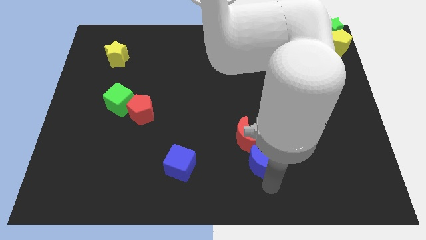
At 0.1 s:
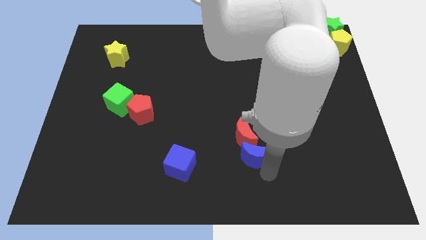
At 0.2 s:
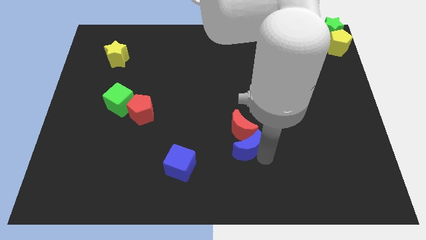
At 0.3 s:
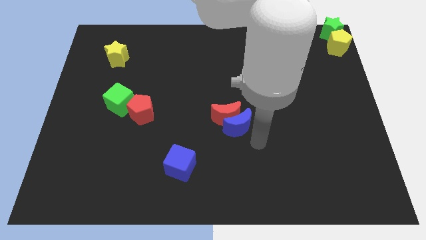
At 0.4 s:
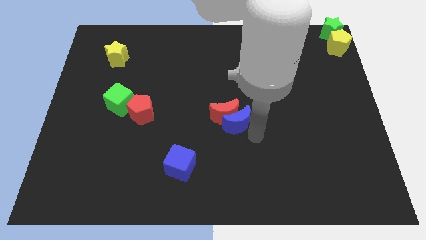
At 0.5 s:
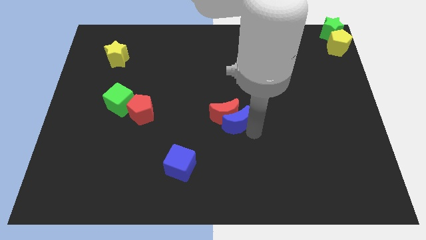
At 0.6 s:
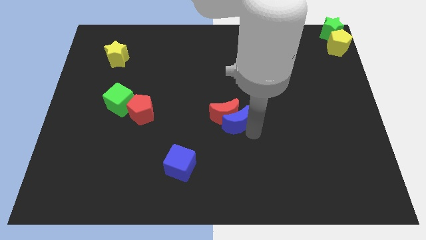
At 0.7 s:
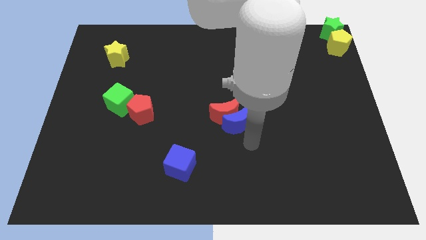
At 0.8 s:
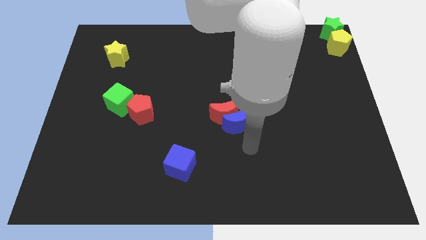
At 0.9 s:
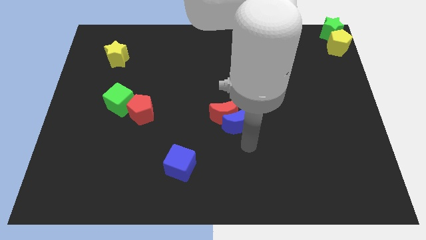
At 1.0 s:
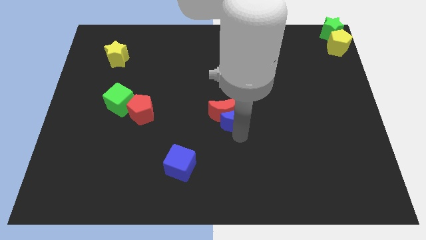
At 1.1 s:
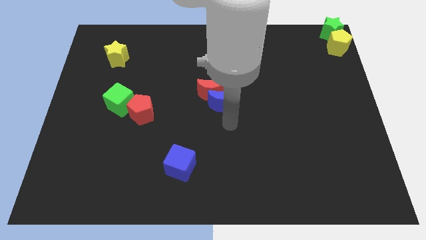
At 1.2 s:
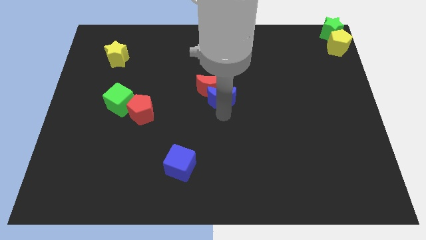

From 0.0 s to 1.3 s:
place the red and blue crescent at the center of the board

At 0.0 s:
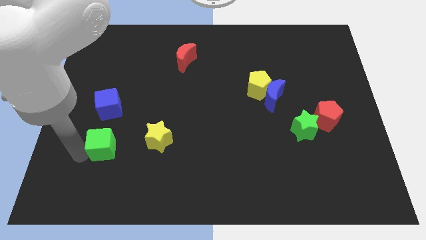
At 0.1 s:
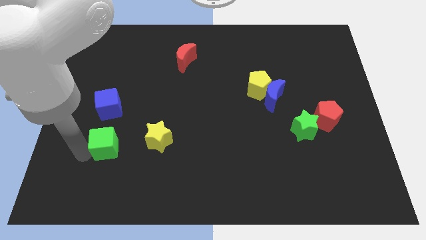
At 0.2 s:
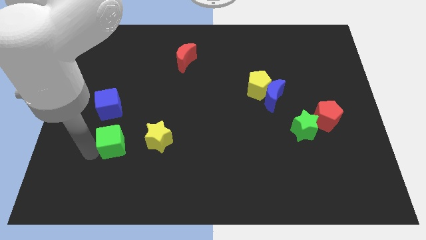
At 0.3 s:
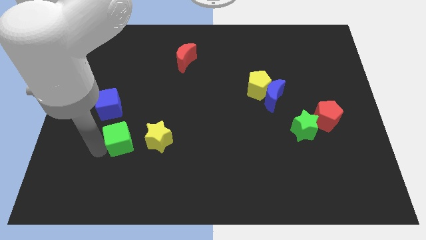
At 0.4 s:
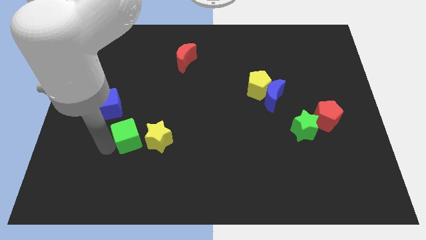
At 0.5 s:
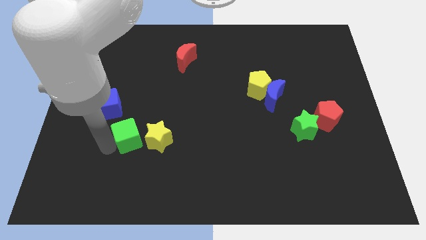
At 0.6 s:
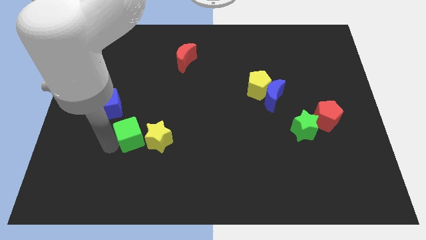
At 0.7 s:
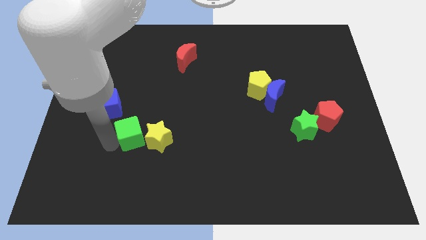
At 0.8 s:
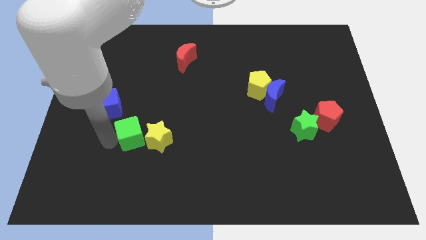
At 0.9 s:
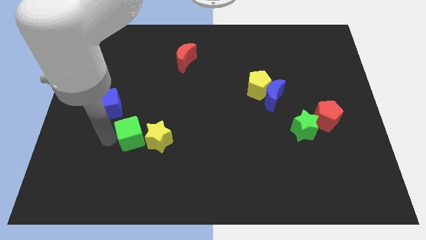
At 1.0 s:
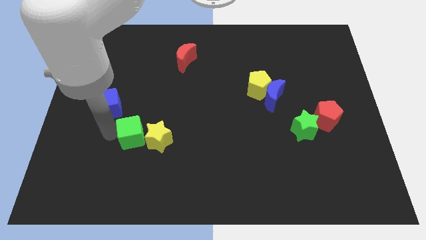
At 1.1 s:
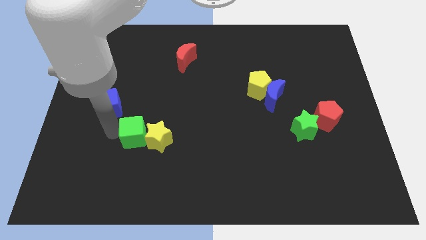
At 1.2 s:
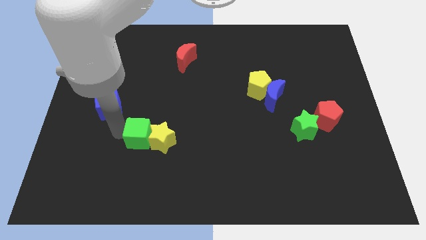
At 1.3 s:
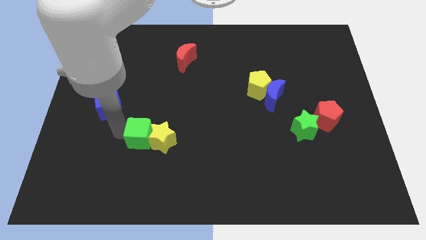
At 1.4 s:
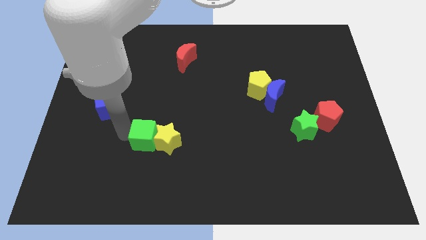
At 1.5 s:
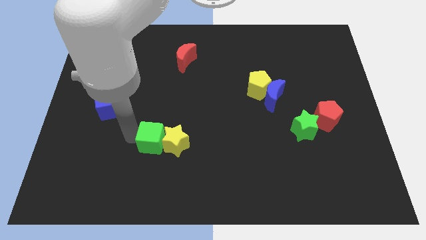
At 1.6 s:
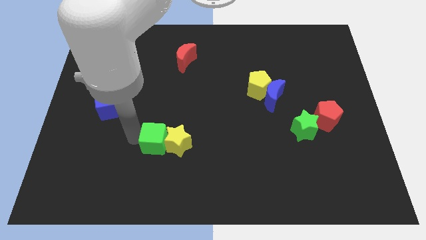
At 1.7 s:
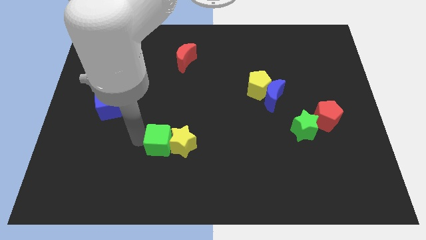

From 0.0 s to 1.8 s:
push the green cube into the yellow star

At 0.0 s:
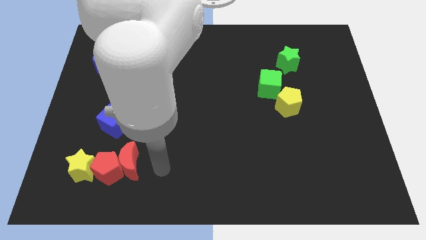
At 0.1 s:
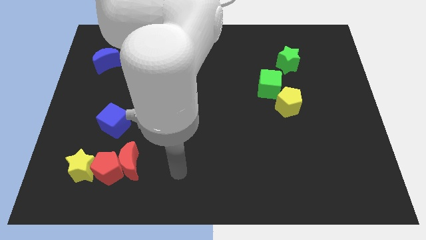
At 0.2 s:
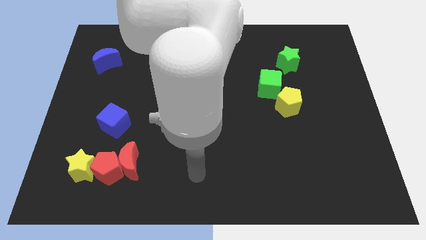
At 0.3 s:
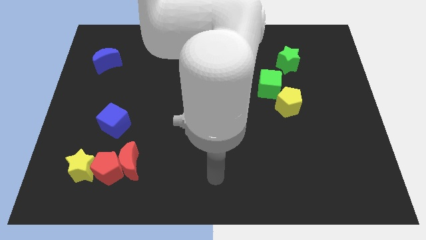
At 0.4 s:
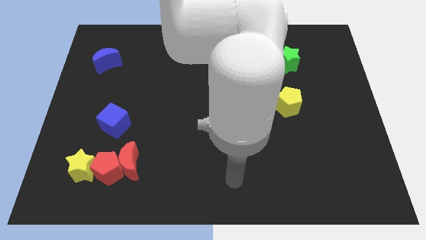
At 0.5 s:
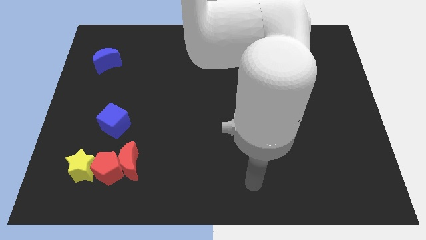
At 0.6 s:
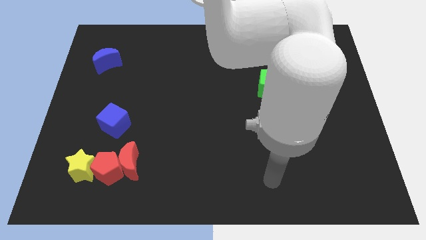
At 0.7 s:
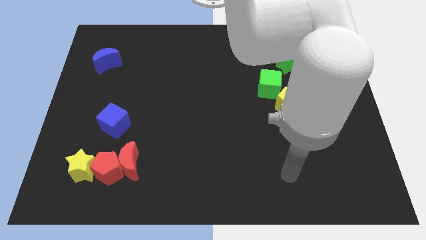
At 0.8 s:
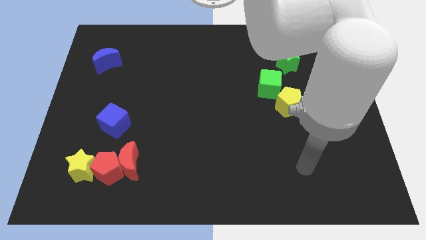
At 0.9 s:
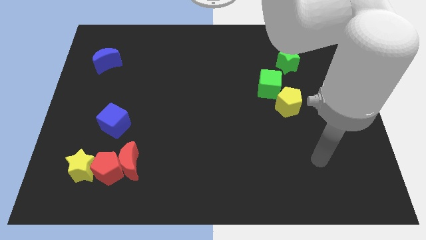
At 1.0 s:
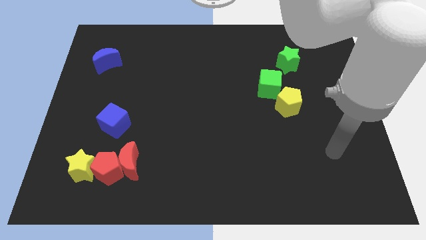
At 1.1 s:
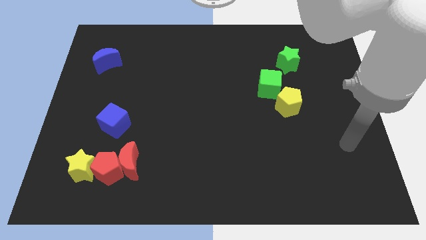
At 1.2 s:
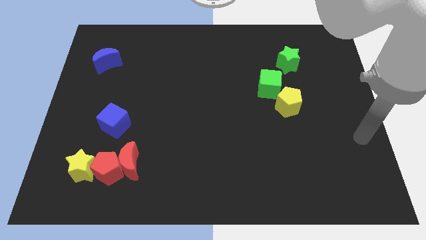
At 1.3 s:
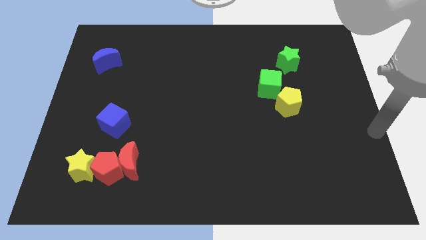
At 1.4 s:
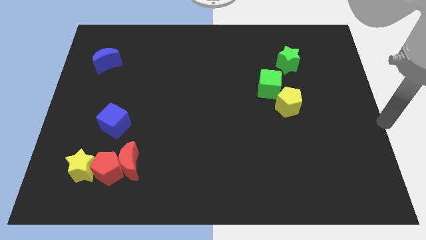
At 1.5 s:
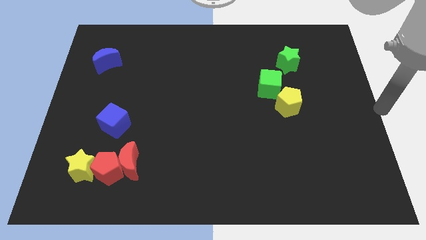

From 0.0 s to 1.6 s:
point your arm at the center right of the board

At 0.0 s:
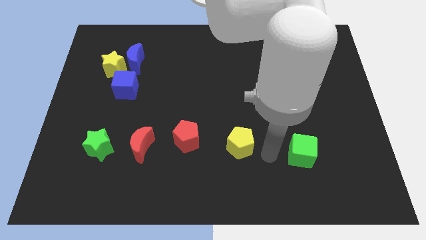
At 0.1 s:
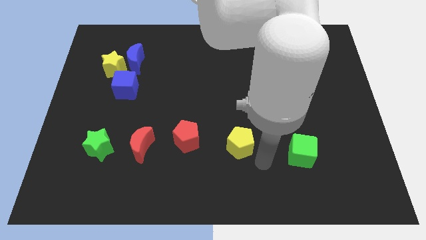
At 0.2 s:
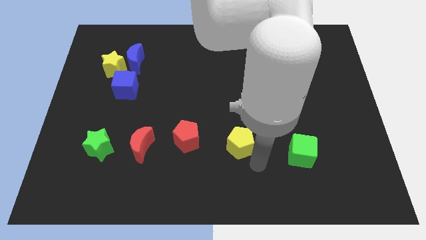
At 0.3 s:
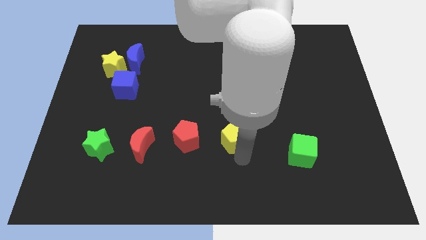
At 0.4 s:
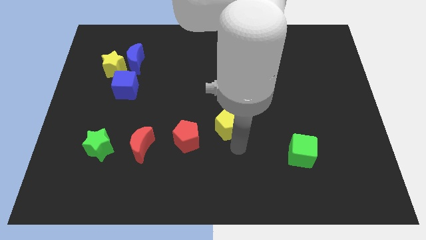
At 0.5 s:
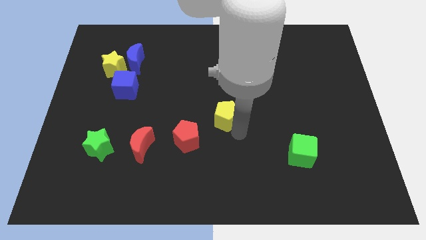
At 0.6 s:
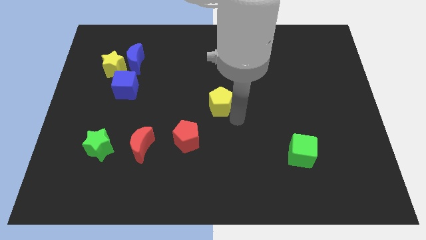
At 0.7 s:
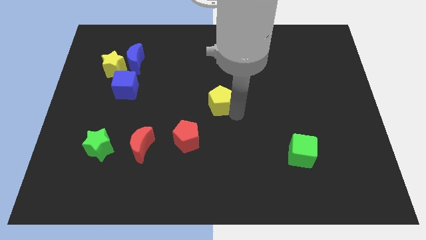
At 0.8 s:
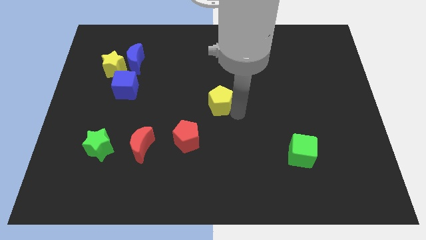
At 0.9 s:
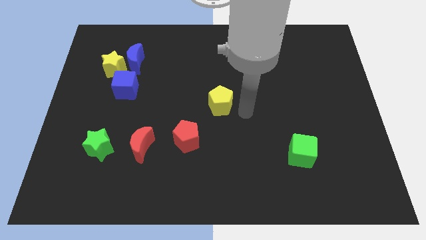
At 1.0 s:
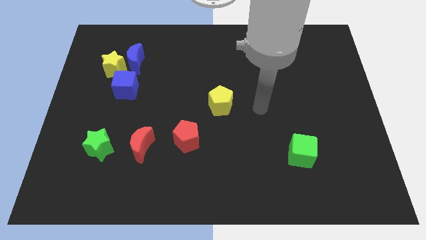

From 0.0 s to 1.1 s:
place the yellow pentagon to the center of the board

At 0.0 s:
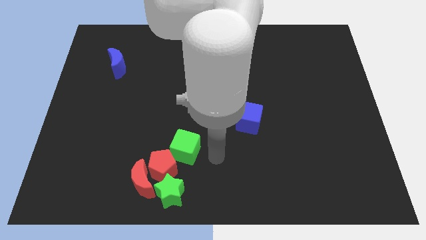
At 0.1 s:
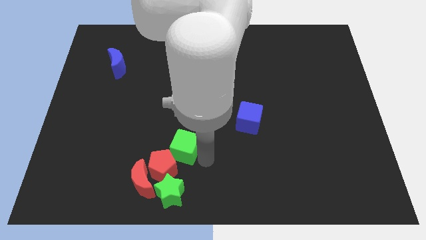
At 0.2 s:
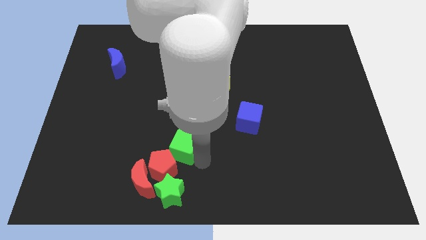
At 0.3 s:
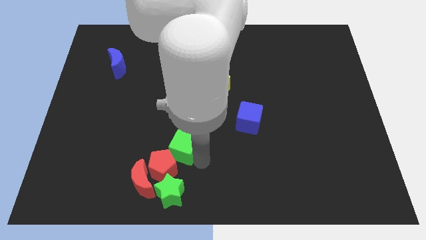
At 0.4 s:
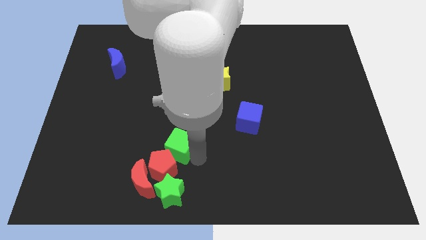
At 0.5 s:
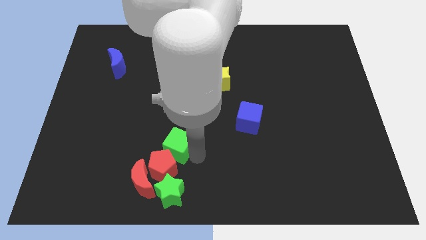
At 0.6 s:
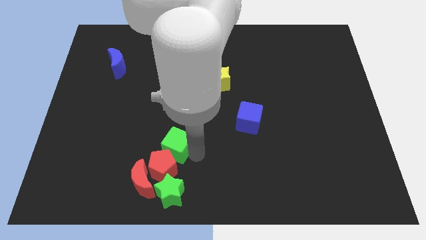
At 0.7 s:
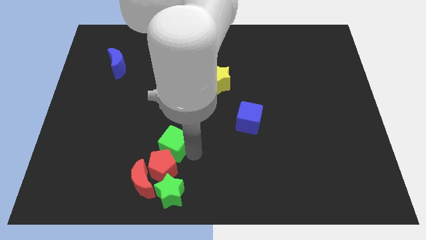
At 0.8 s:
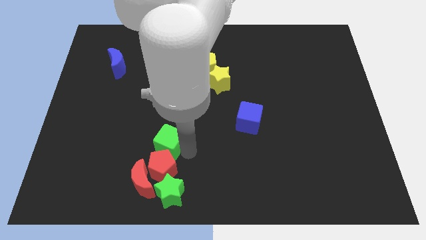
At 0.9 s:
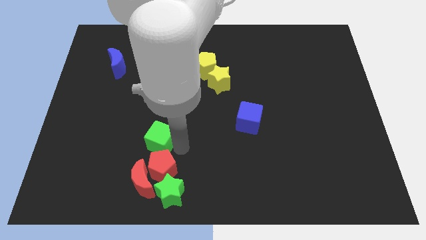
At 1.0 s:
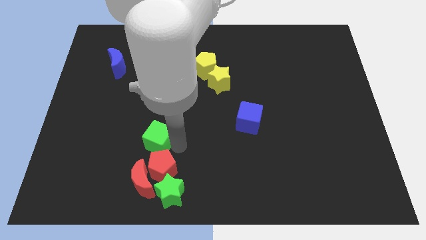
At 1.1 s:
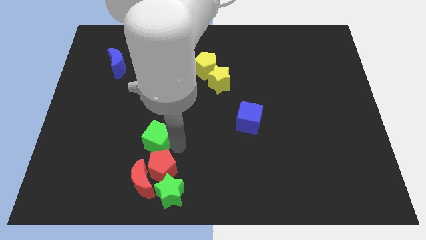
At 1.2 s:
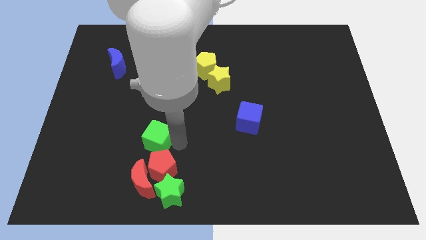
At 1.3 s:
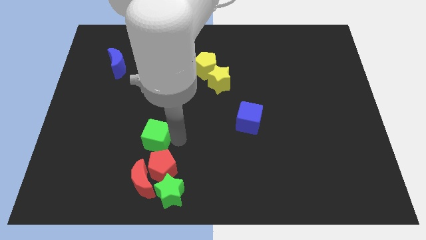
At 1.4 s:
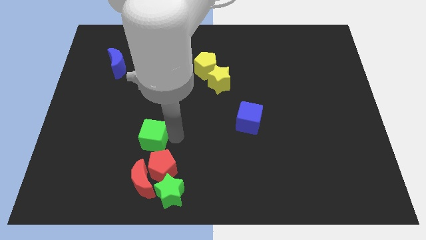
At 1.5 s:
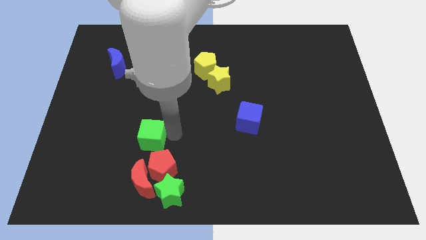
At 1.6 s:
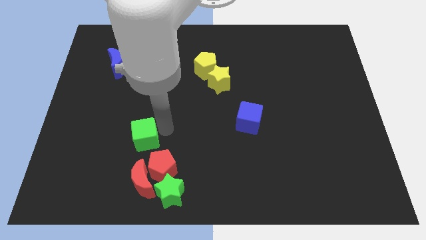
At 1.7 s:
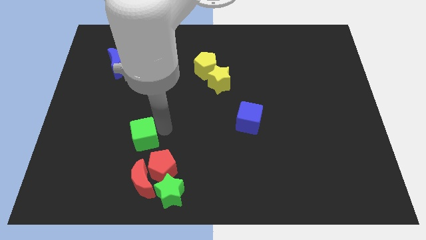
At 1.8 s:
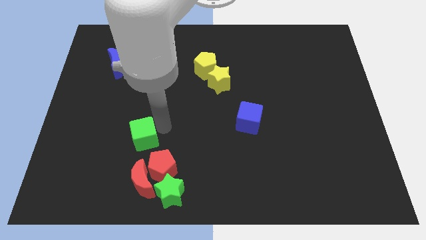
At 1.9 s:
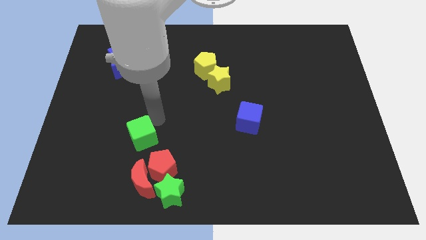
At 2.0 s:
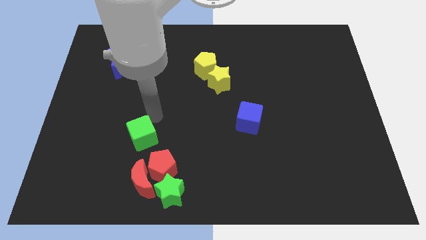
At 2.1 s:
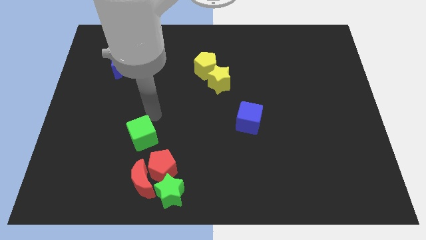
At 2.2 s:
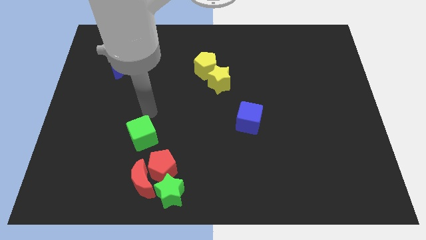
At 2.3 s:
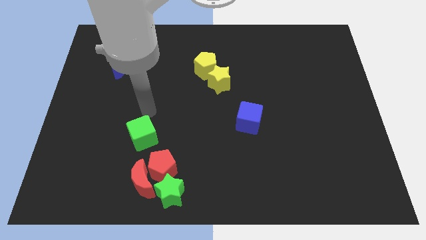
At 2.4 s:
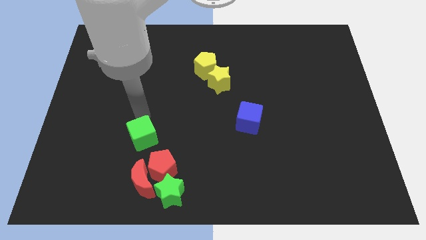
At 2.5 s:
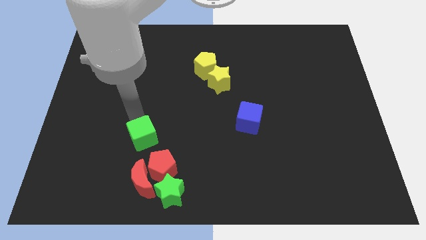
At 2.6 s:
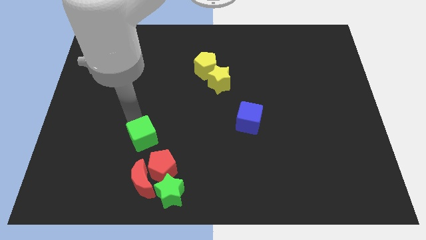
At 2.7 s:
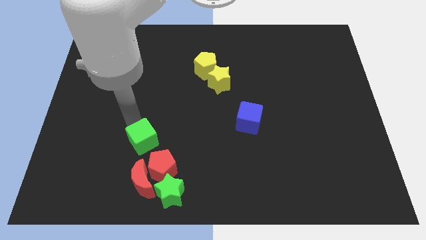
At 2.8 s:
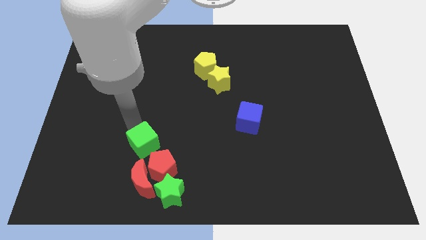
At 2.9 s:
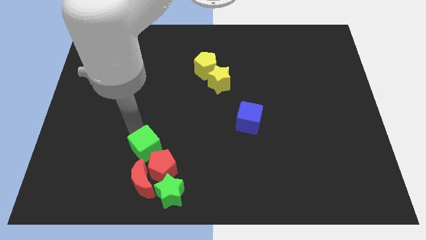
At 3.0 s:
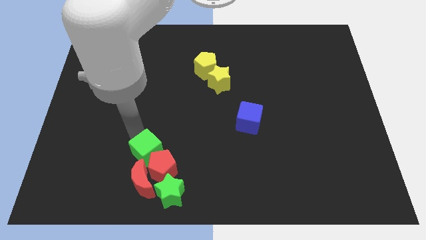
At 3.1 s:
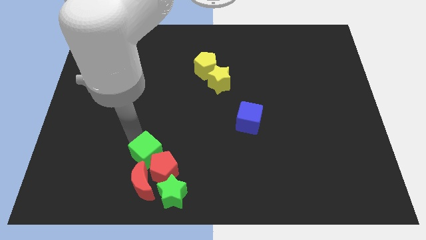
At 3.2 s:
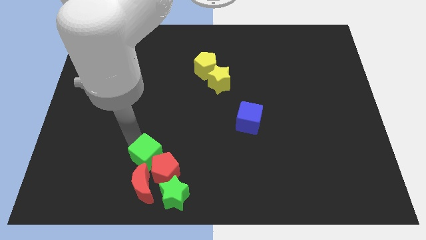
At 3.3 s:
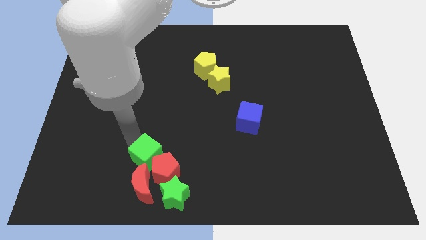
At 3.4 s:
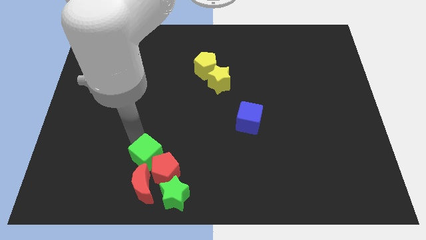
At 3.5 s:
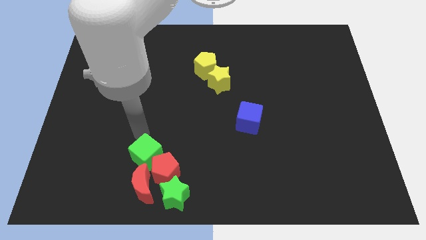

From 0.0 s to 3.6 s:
move the green cube to the top right of red pentagon
